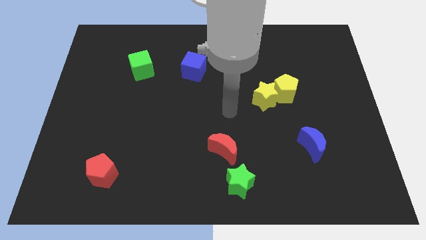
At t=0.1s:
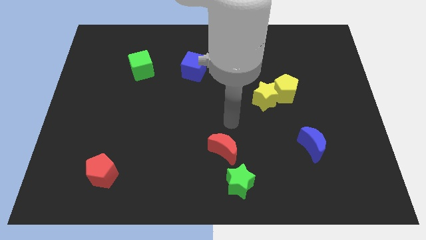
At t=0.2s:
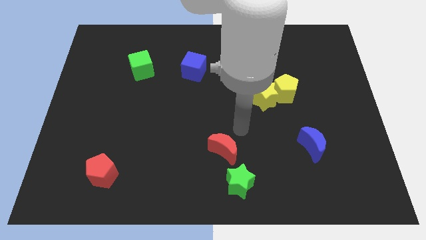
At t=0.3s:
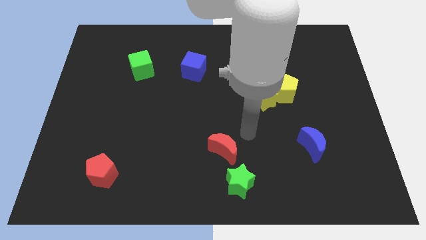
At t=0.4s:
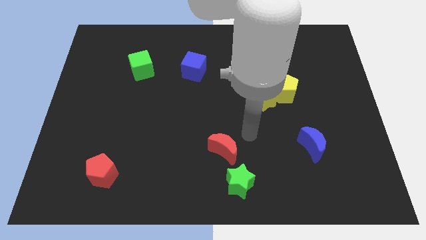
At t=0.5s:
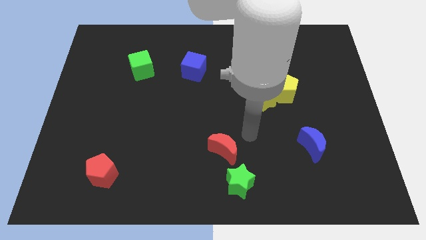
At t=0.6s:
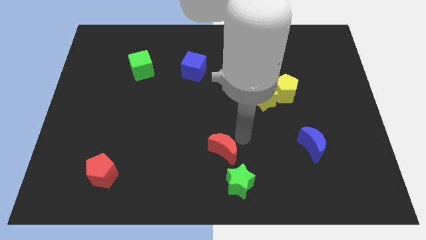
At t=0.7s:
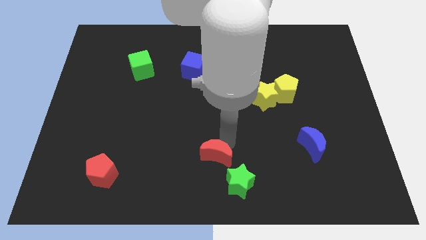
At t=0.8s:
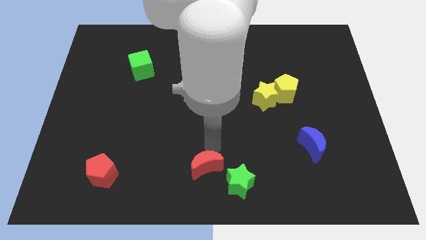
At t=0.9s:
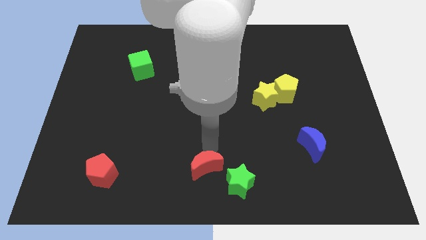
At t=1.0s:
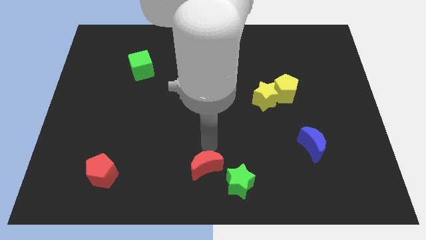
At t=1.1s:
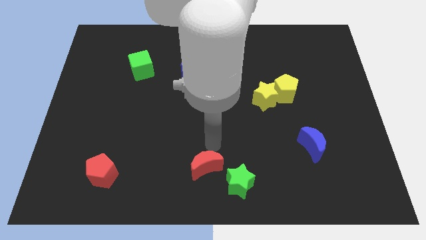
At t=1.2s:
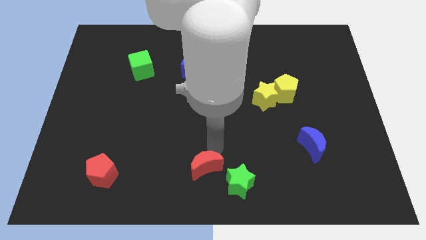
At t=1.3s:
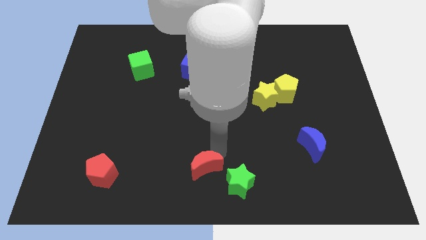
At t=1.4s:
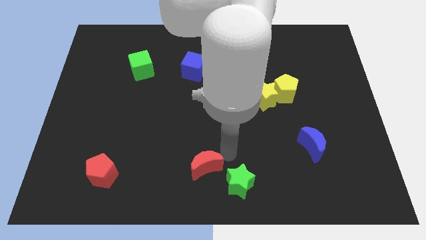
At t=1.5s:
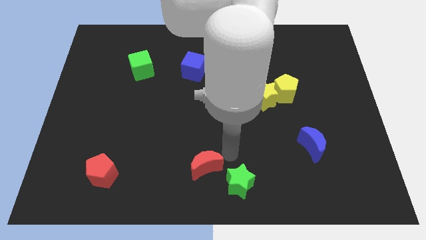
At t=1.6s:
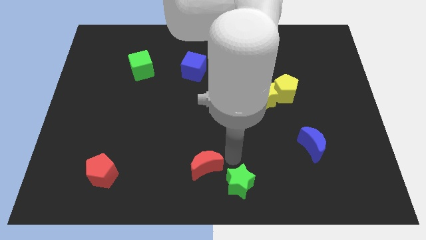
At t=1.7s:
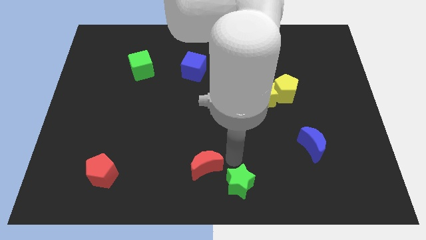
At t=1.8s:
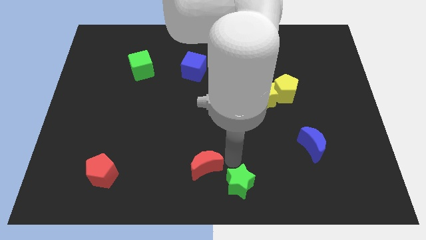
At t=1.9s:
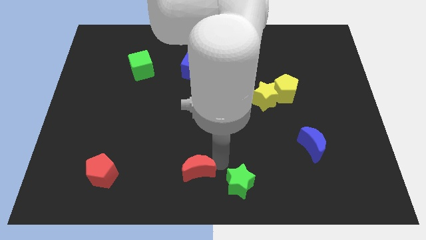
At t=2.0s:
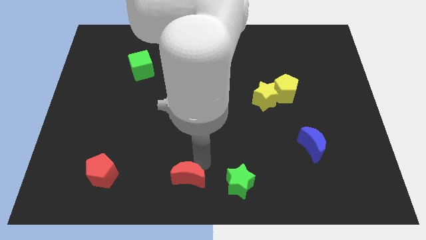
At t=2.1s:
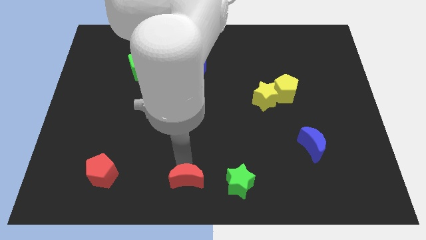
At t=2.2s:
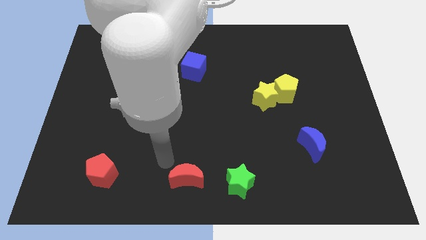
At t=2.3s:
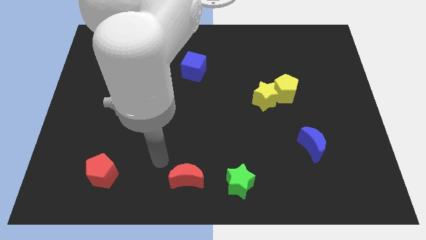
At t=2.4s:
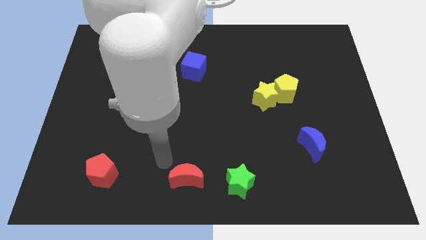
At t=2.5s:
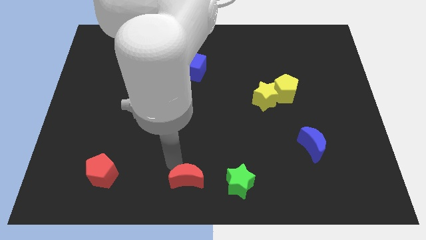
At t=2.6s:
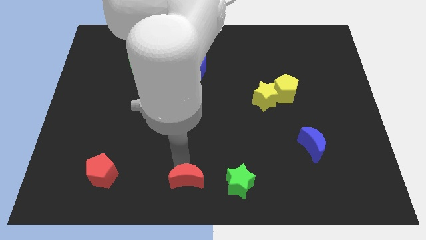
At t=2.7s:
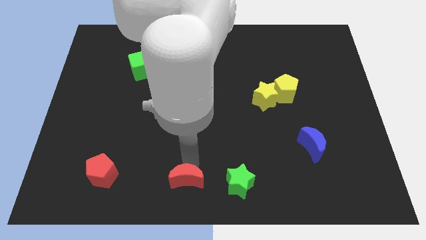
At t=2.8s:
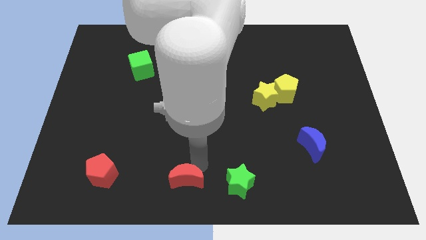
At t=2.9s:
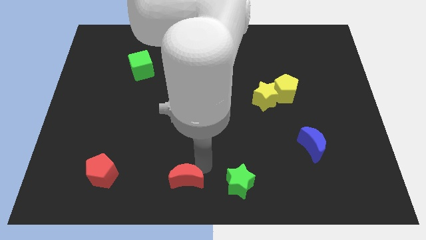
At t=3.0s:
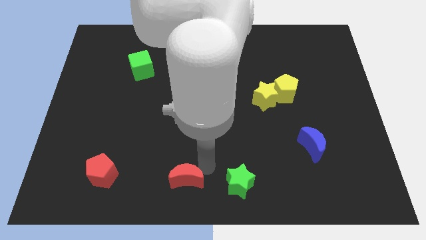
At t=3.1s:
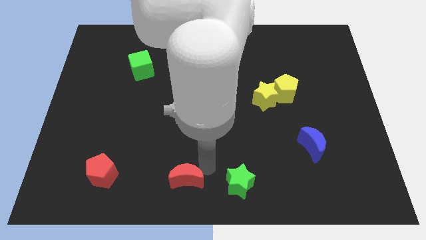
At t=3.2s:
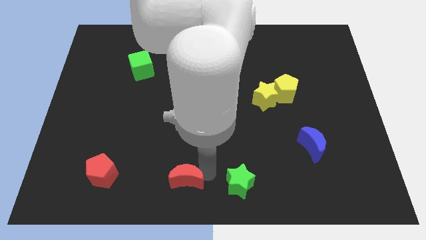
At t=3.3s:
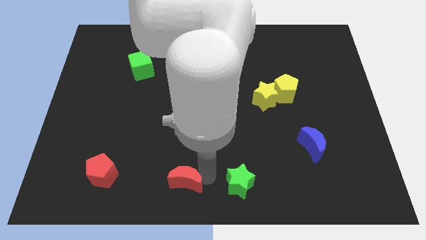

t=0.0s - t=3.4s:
place the red crescent to the right of the red pentagon

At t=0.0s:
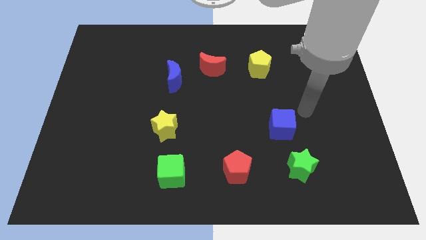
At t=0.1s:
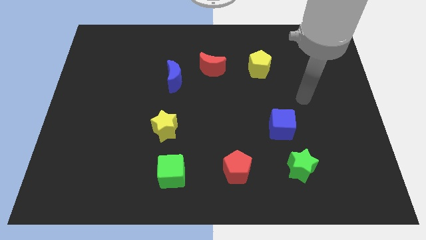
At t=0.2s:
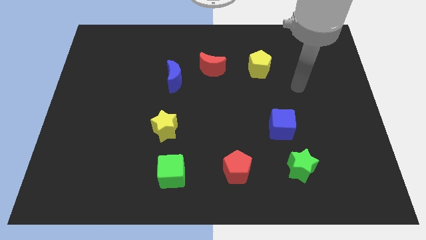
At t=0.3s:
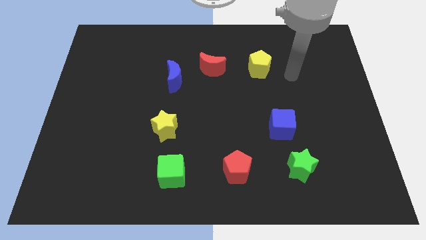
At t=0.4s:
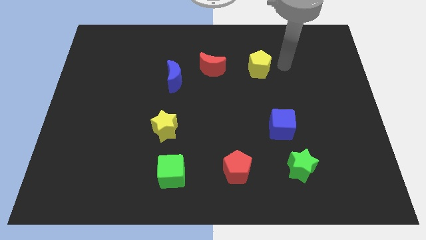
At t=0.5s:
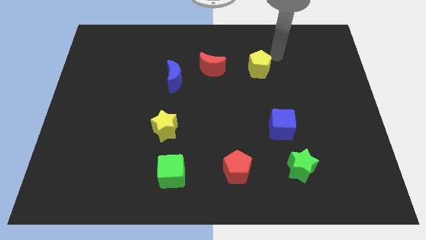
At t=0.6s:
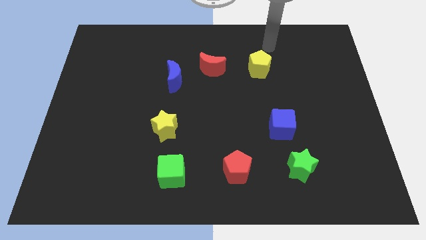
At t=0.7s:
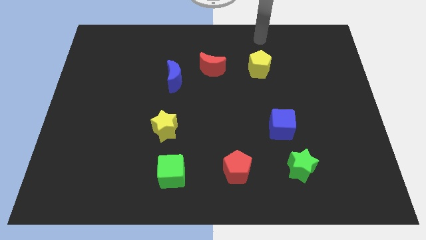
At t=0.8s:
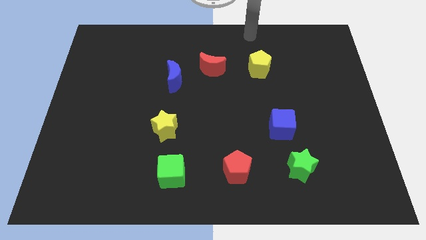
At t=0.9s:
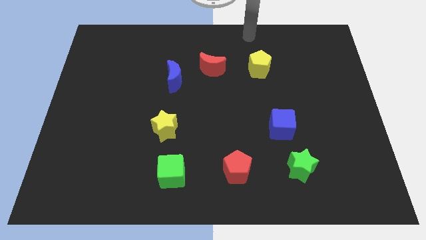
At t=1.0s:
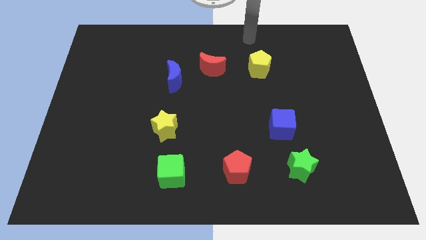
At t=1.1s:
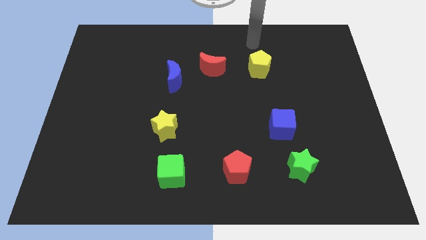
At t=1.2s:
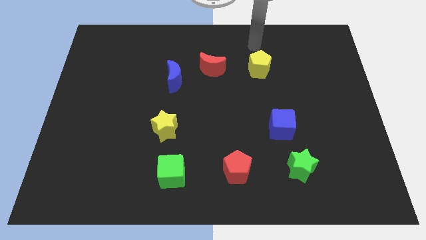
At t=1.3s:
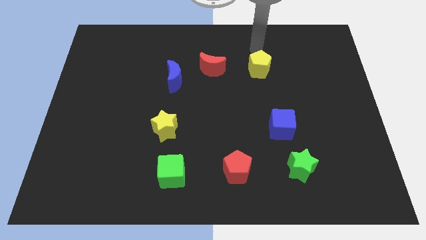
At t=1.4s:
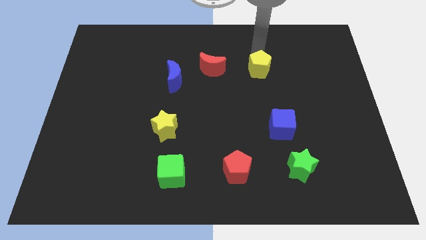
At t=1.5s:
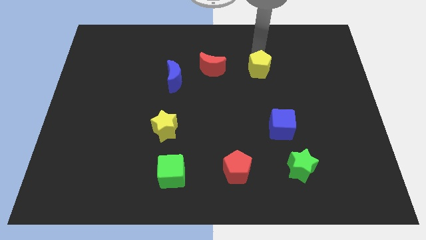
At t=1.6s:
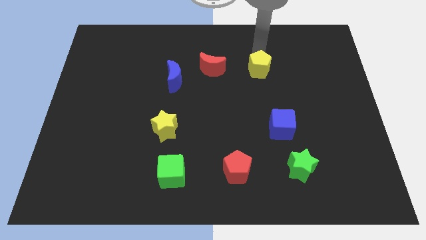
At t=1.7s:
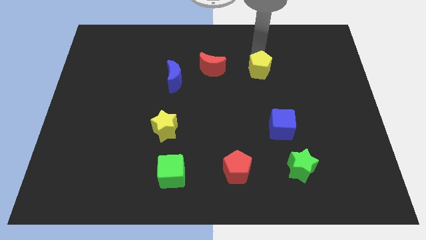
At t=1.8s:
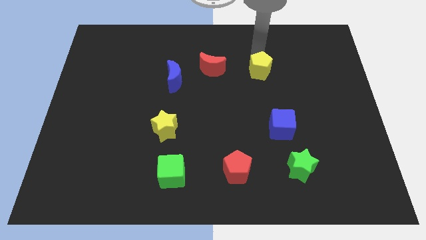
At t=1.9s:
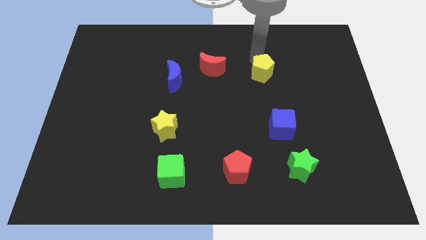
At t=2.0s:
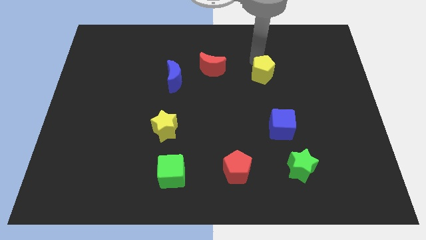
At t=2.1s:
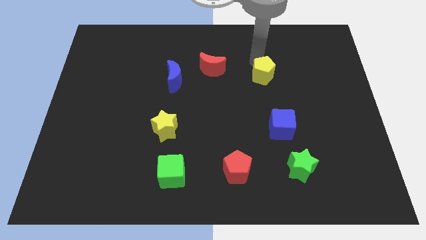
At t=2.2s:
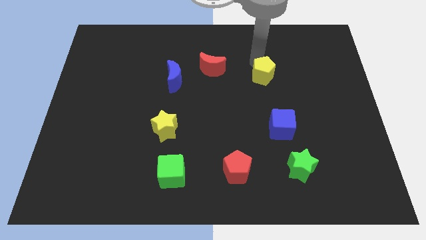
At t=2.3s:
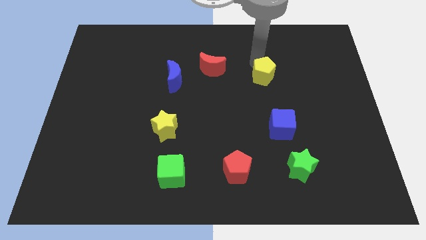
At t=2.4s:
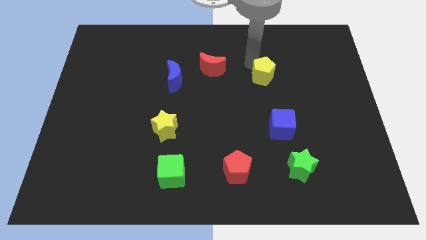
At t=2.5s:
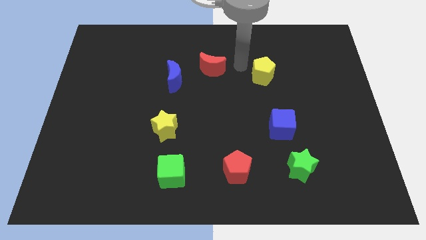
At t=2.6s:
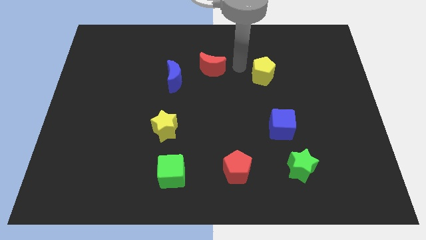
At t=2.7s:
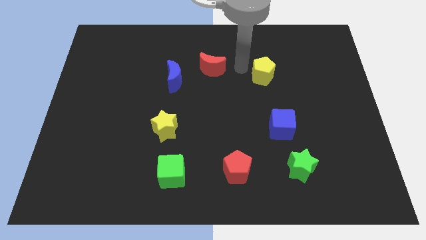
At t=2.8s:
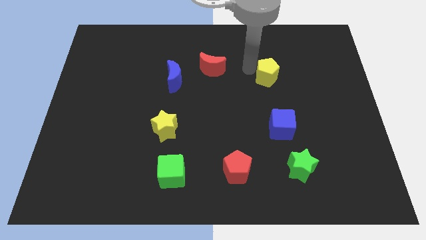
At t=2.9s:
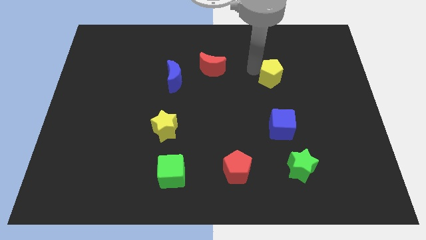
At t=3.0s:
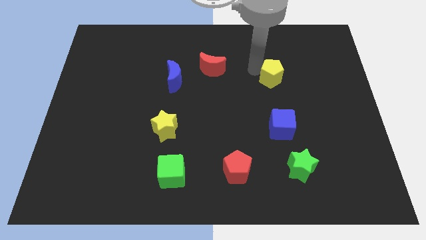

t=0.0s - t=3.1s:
slide yellow pentagon slightly down

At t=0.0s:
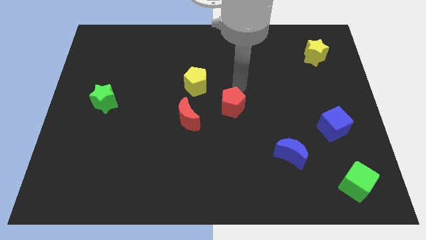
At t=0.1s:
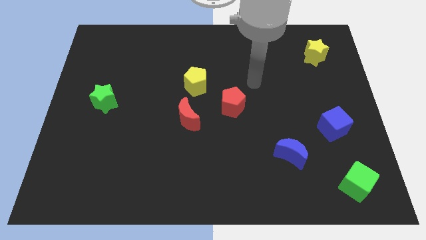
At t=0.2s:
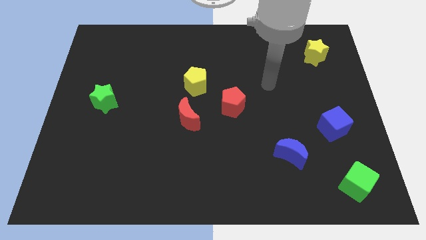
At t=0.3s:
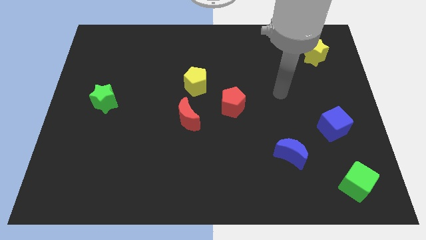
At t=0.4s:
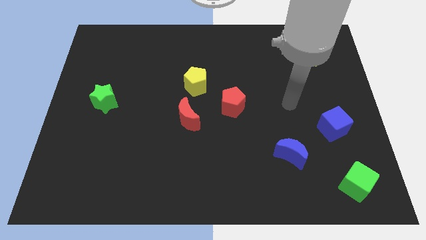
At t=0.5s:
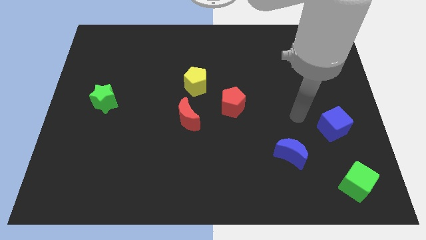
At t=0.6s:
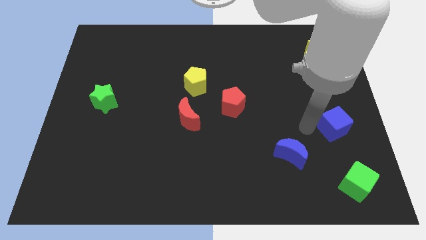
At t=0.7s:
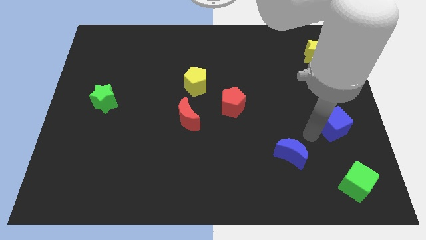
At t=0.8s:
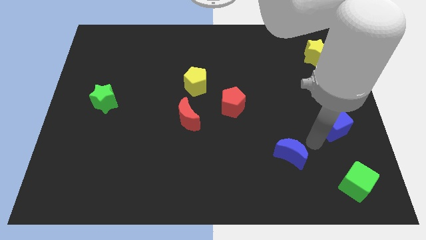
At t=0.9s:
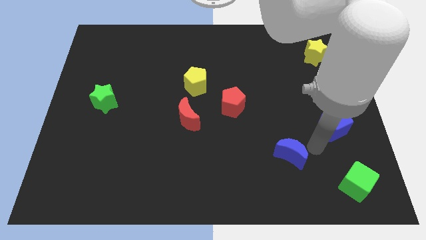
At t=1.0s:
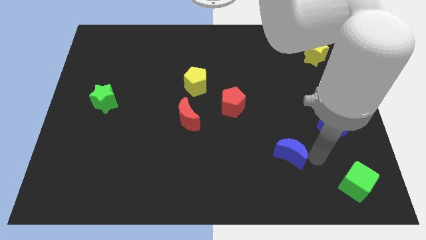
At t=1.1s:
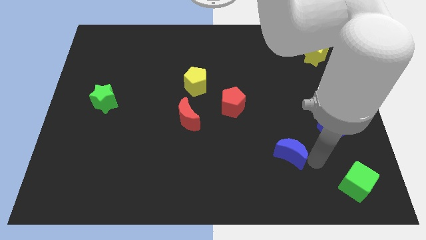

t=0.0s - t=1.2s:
place your arm to the right of the blue moon

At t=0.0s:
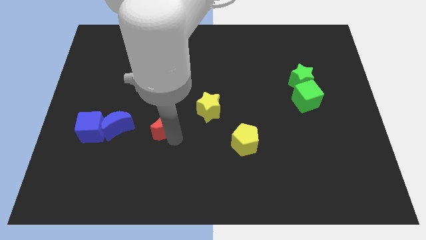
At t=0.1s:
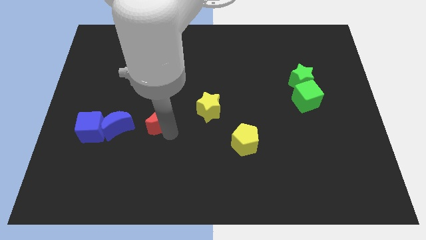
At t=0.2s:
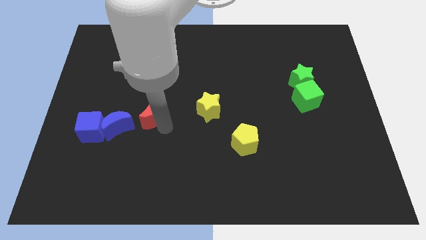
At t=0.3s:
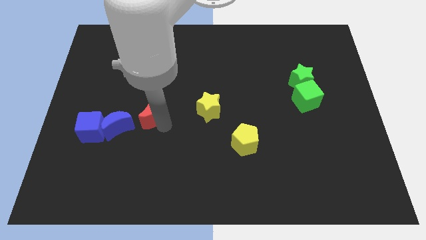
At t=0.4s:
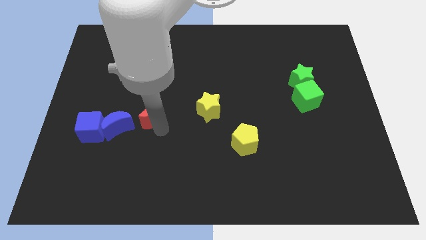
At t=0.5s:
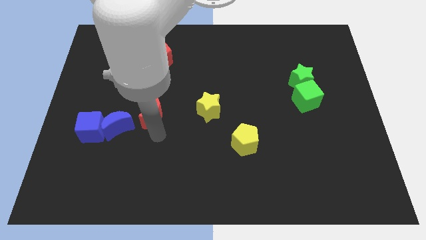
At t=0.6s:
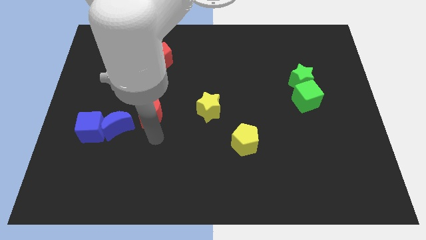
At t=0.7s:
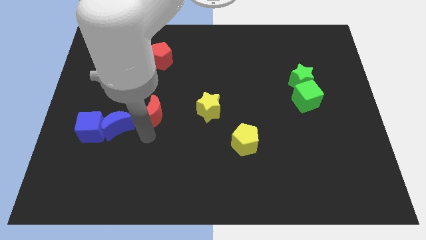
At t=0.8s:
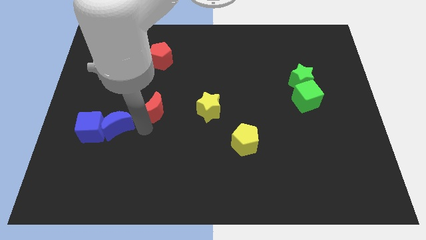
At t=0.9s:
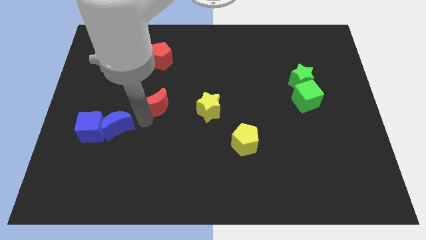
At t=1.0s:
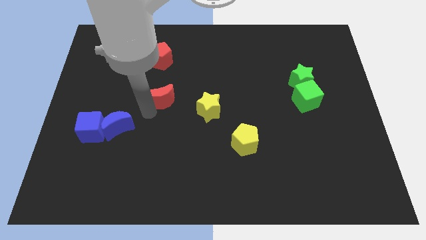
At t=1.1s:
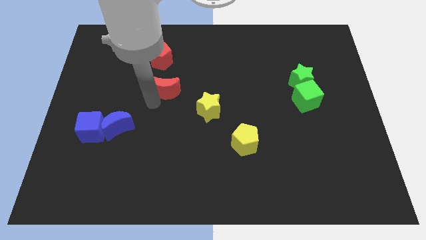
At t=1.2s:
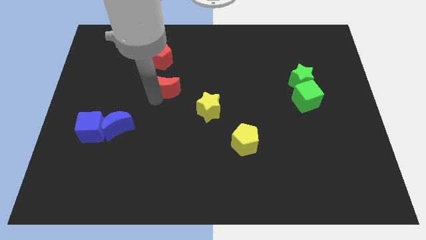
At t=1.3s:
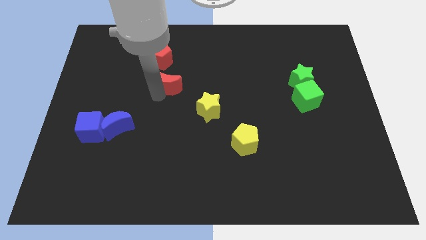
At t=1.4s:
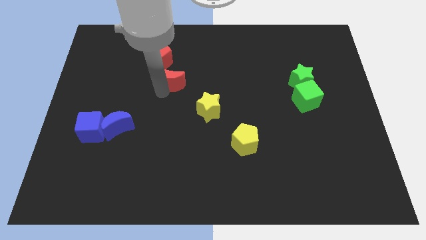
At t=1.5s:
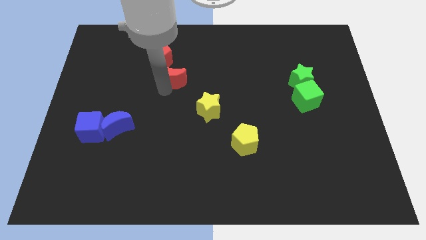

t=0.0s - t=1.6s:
put the red moon between the yellow star and red pentagon
